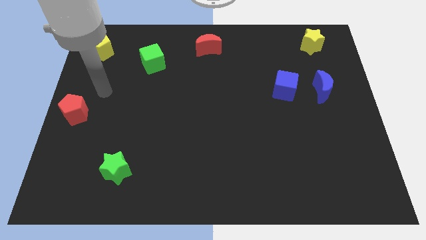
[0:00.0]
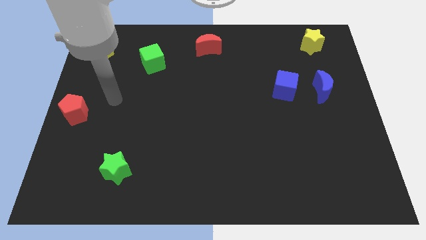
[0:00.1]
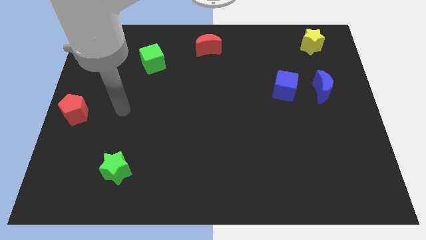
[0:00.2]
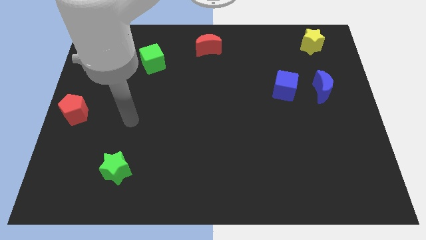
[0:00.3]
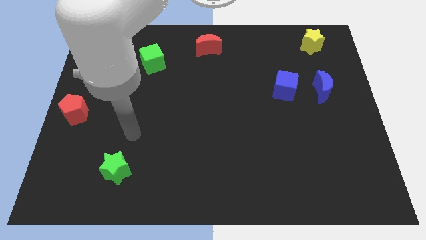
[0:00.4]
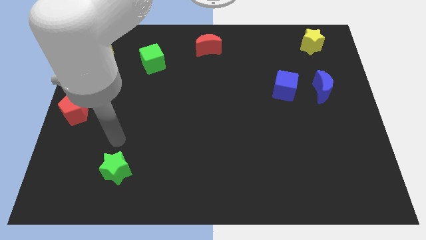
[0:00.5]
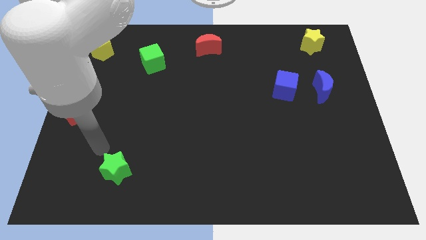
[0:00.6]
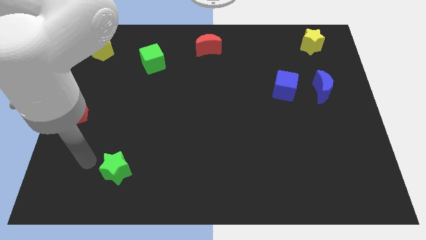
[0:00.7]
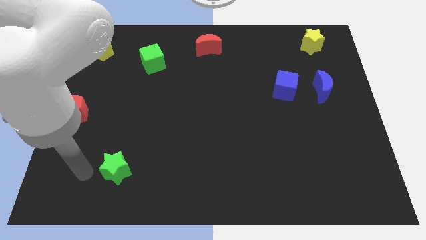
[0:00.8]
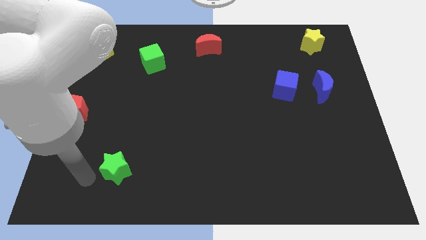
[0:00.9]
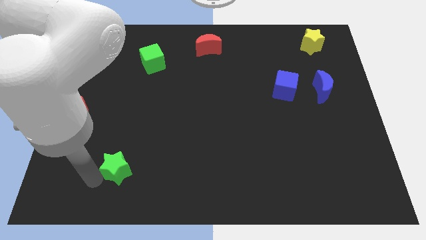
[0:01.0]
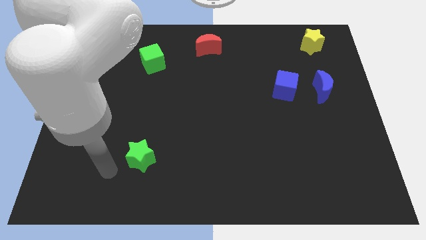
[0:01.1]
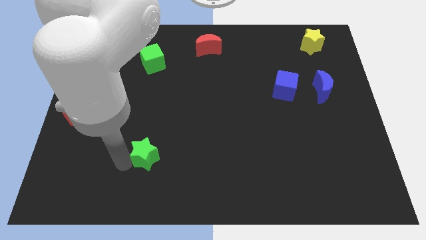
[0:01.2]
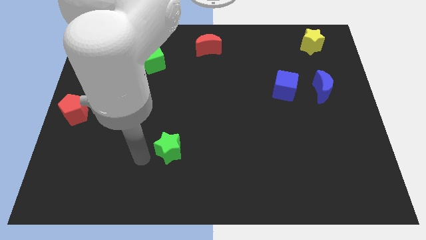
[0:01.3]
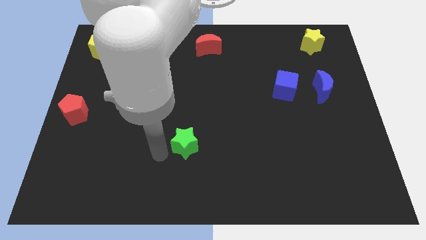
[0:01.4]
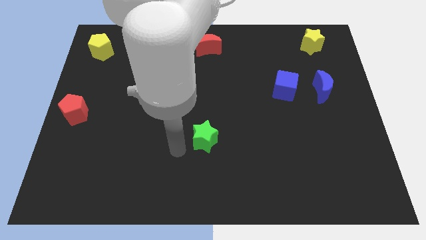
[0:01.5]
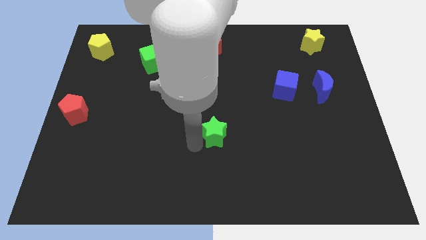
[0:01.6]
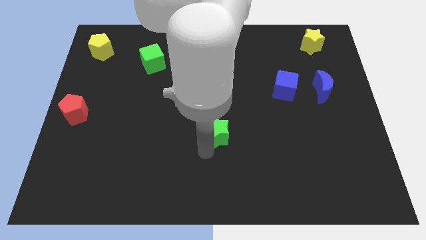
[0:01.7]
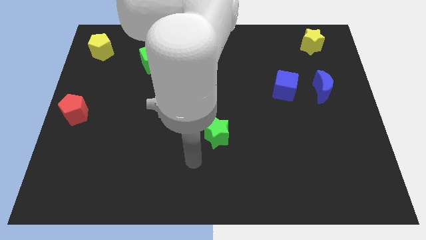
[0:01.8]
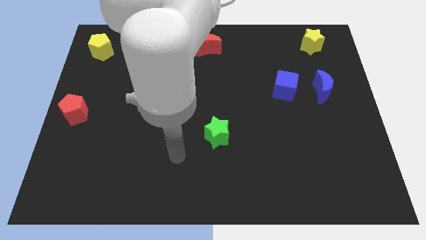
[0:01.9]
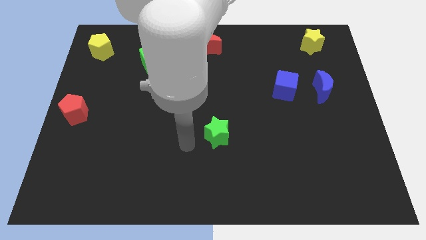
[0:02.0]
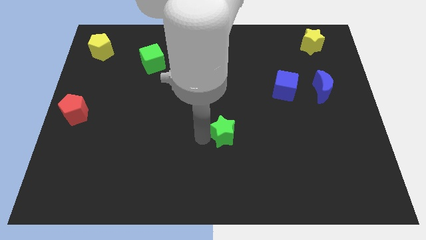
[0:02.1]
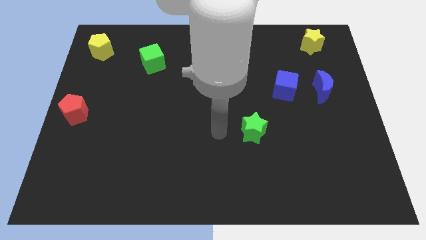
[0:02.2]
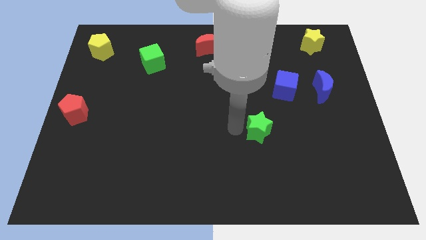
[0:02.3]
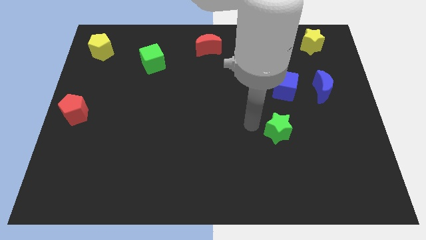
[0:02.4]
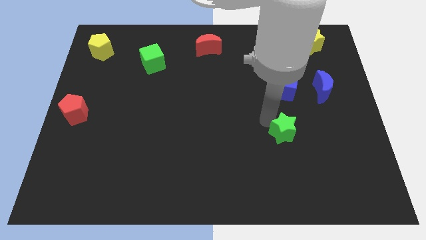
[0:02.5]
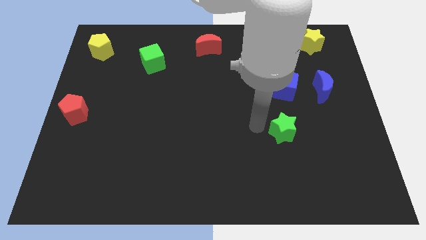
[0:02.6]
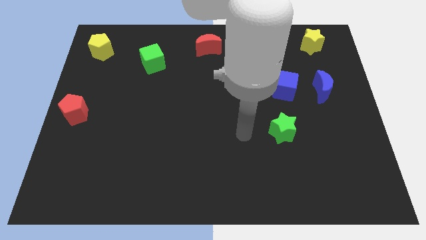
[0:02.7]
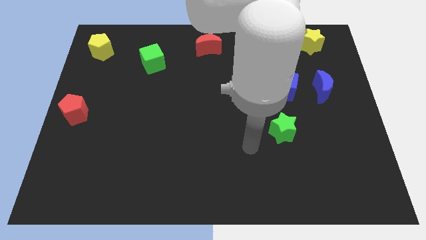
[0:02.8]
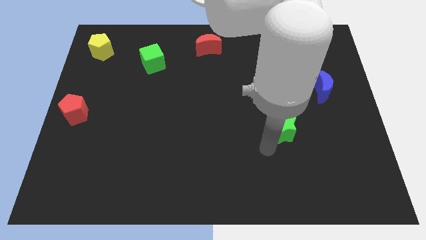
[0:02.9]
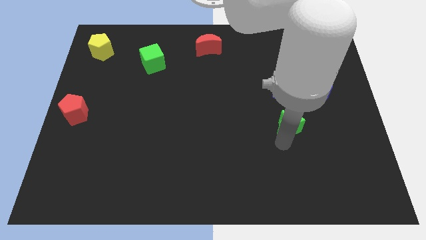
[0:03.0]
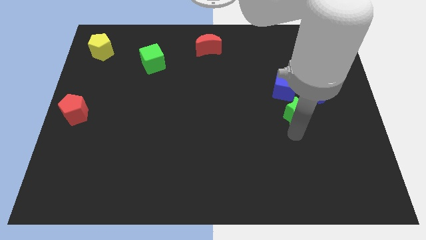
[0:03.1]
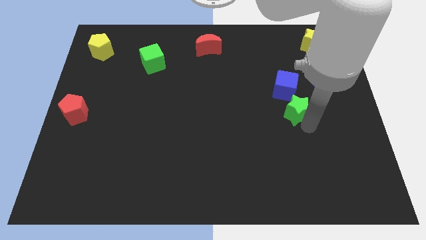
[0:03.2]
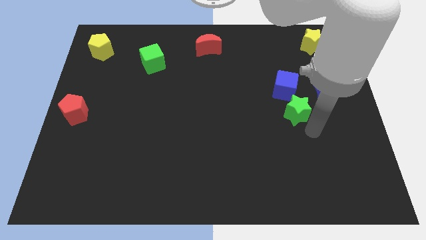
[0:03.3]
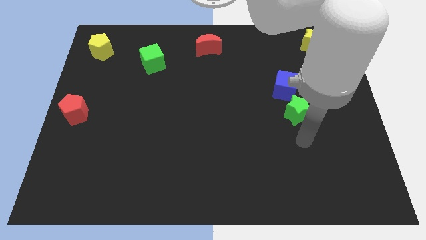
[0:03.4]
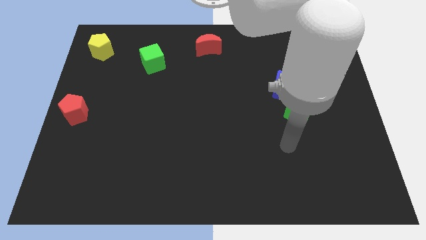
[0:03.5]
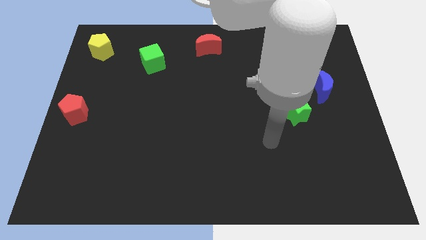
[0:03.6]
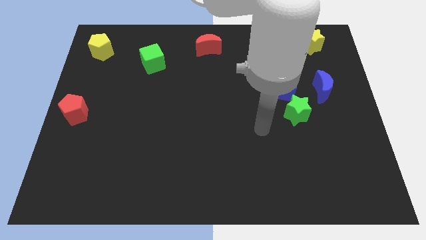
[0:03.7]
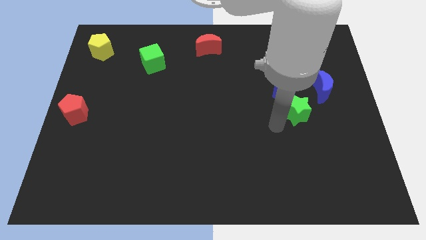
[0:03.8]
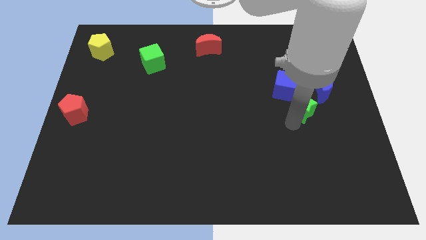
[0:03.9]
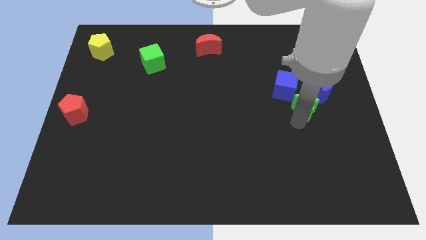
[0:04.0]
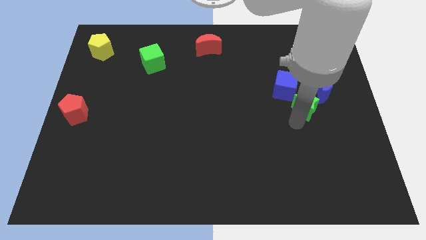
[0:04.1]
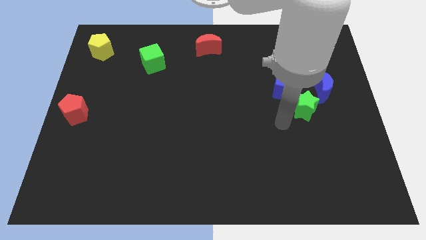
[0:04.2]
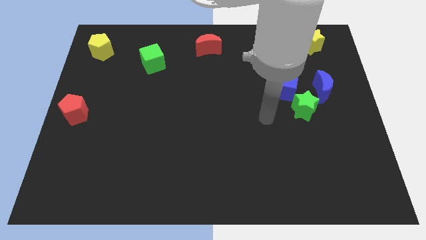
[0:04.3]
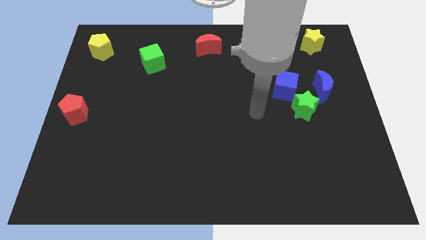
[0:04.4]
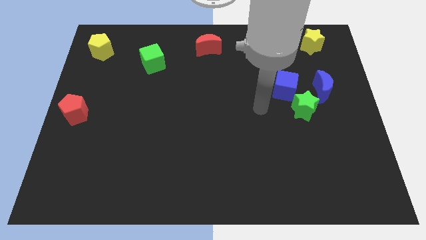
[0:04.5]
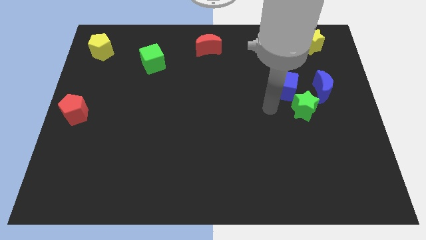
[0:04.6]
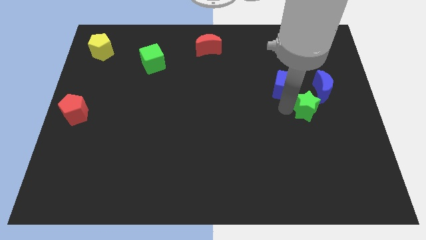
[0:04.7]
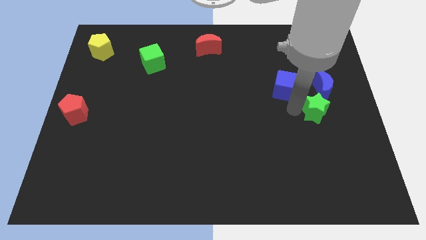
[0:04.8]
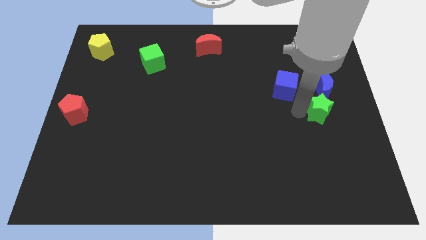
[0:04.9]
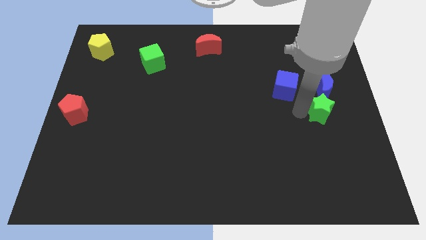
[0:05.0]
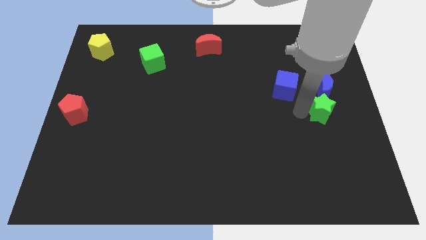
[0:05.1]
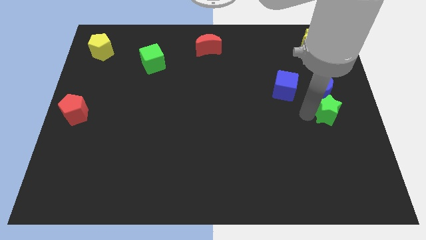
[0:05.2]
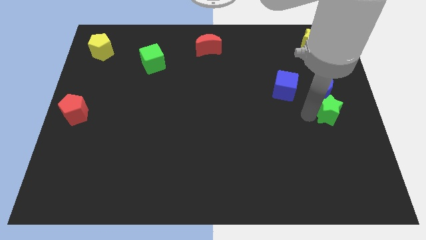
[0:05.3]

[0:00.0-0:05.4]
move the green star below the blue crescent

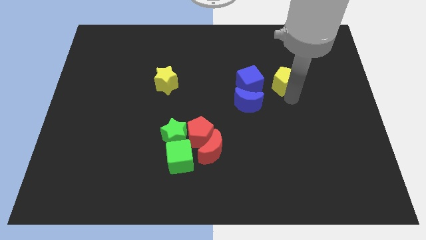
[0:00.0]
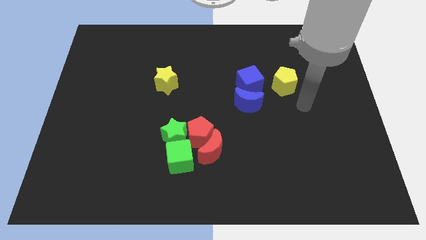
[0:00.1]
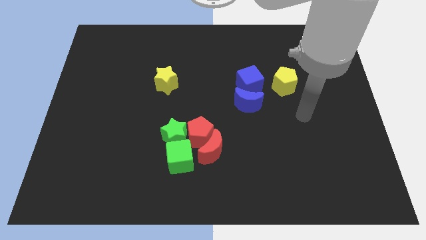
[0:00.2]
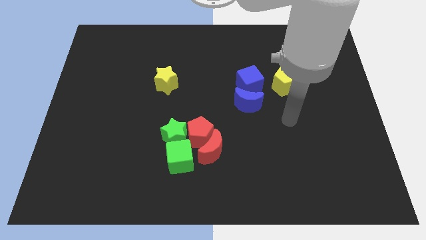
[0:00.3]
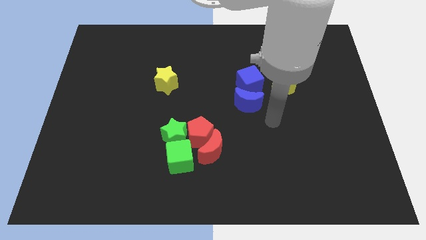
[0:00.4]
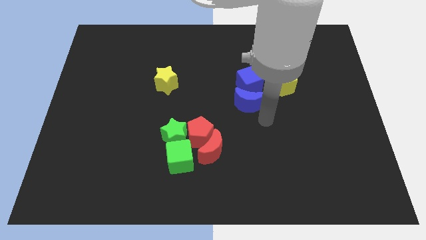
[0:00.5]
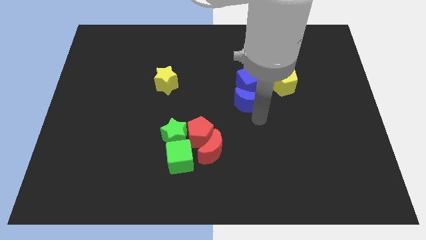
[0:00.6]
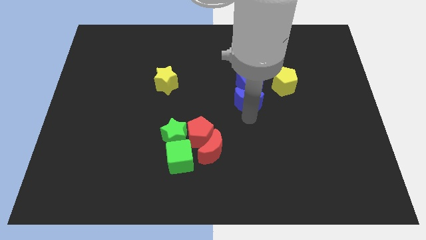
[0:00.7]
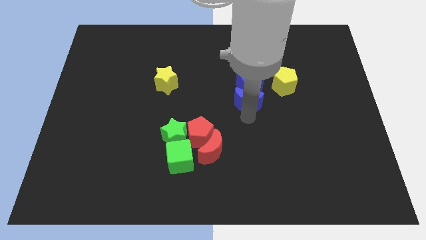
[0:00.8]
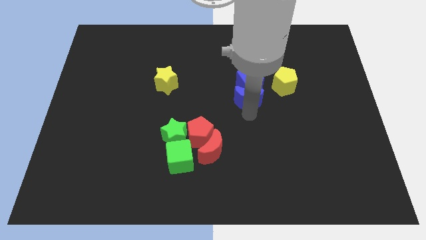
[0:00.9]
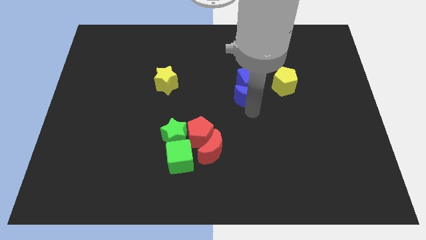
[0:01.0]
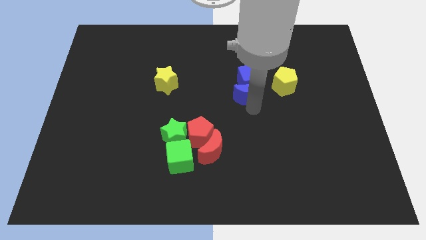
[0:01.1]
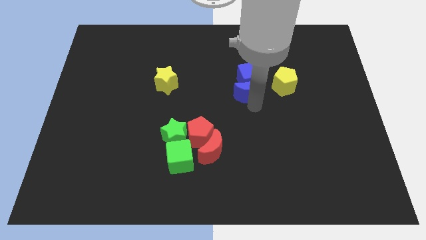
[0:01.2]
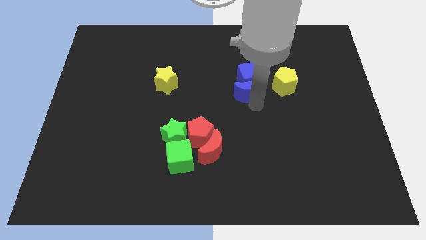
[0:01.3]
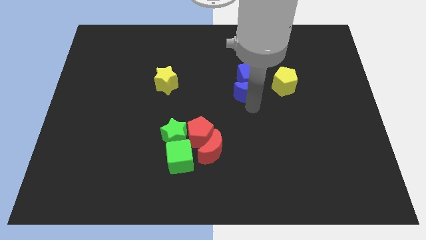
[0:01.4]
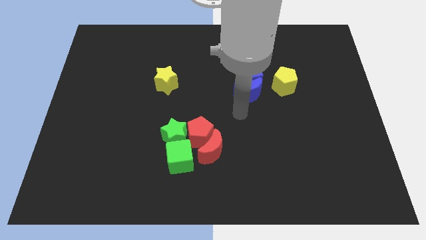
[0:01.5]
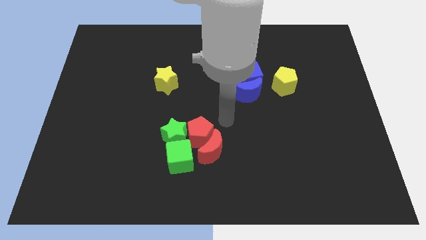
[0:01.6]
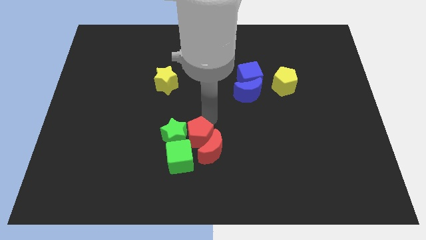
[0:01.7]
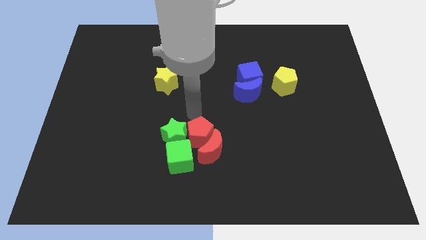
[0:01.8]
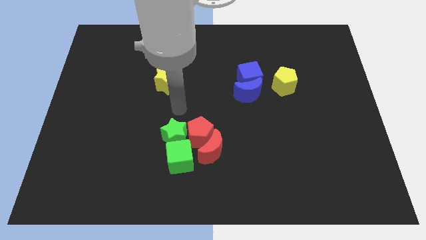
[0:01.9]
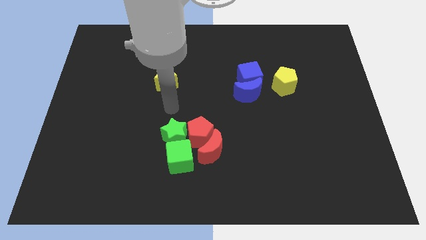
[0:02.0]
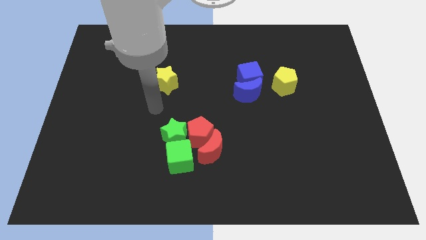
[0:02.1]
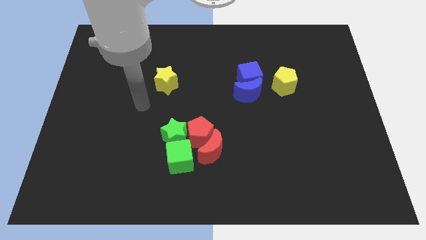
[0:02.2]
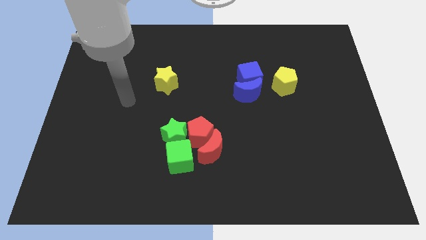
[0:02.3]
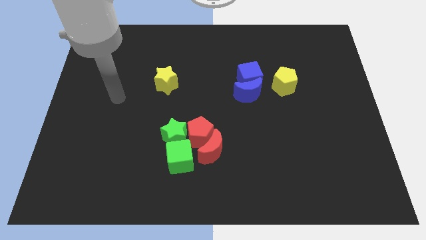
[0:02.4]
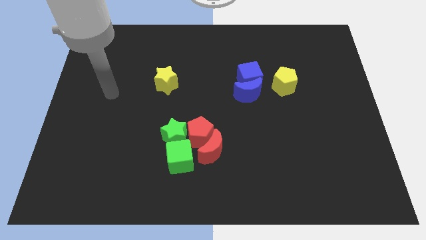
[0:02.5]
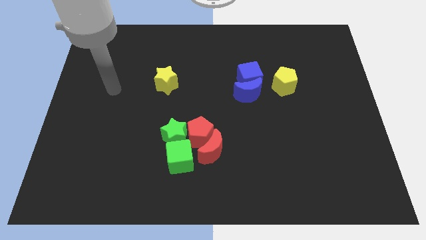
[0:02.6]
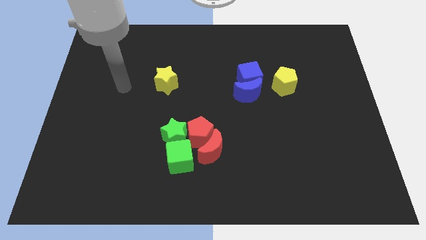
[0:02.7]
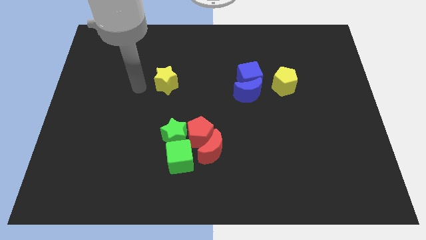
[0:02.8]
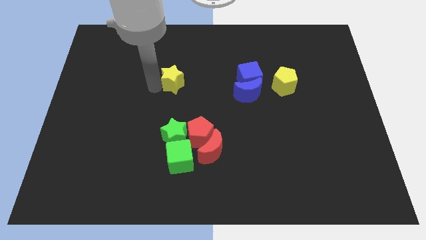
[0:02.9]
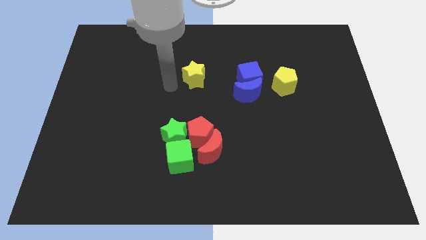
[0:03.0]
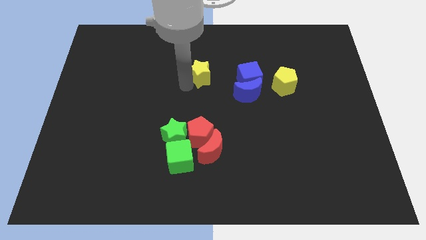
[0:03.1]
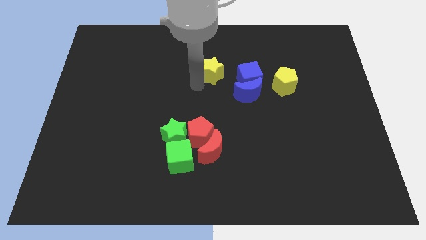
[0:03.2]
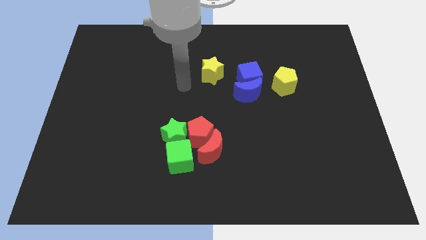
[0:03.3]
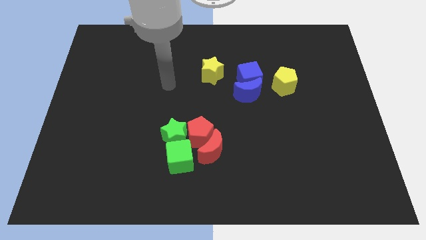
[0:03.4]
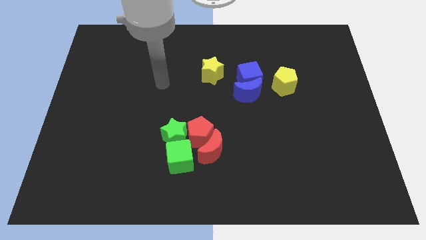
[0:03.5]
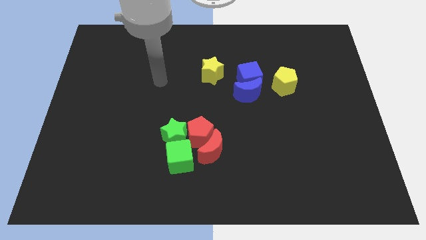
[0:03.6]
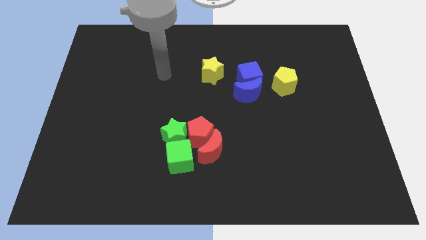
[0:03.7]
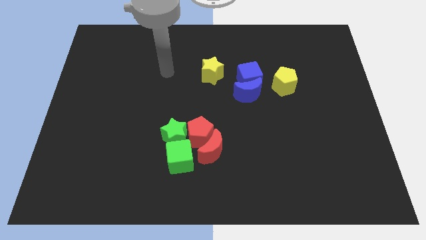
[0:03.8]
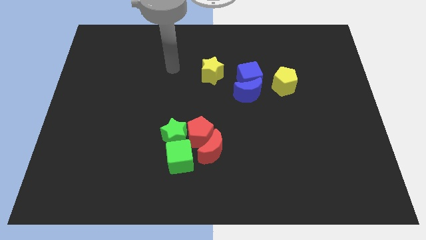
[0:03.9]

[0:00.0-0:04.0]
push the yellow star towards the blue cube
